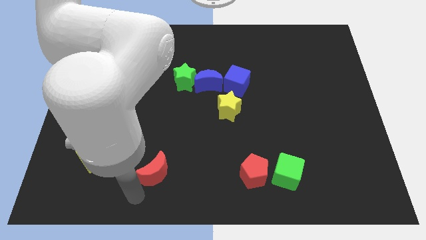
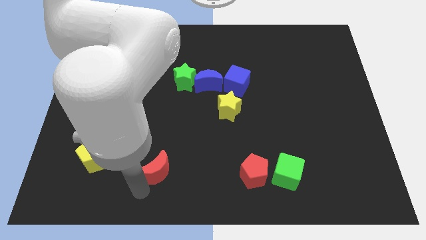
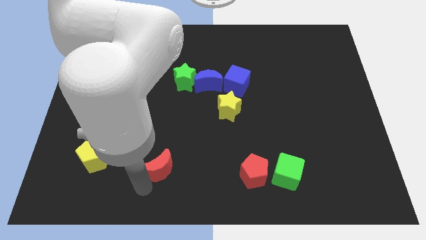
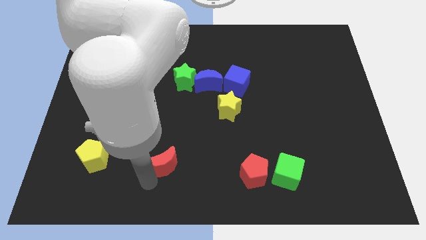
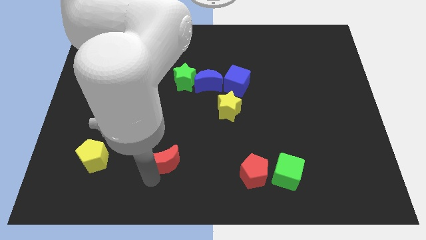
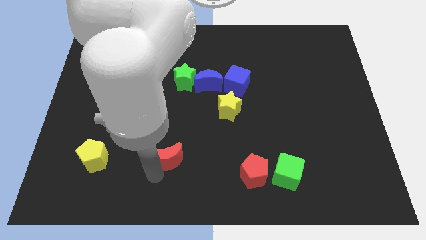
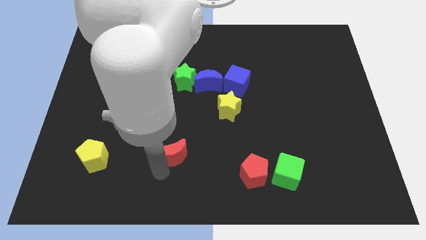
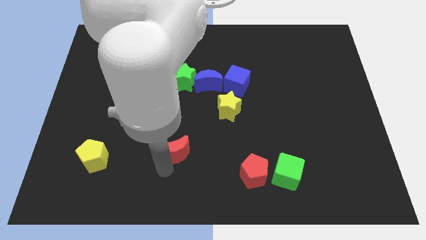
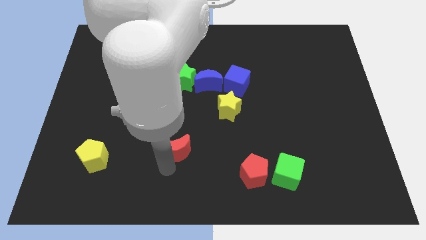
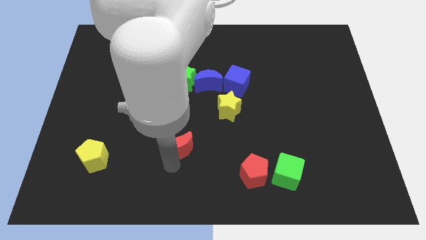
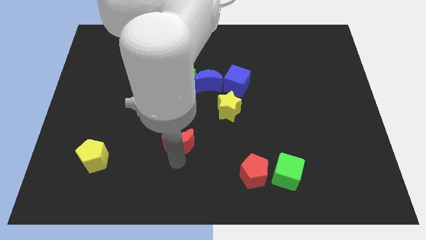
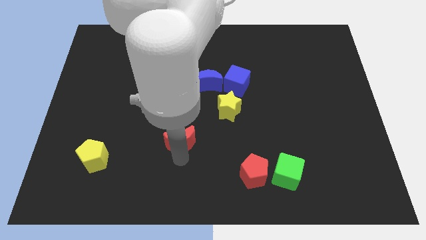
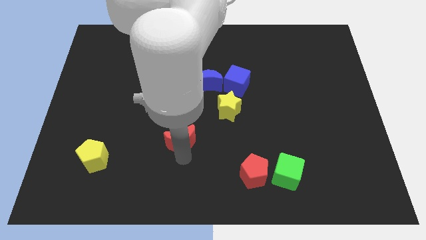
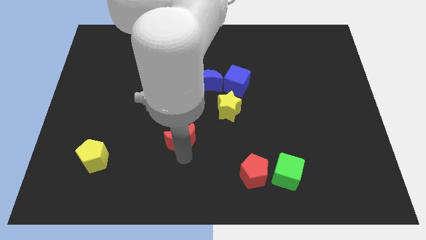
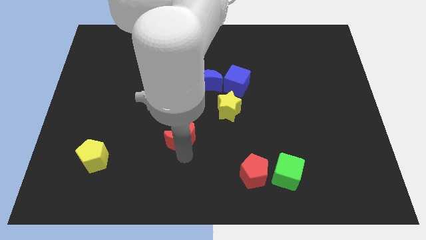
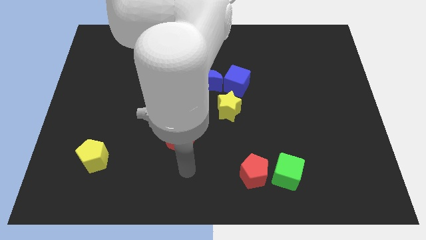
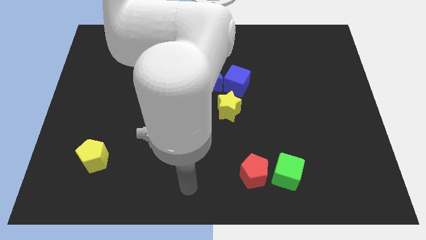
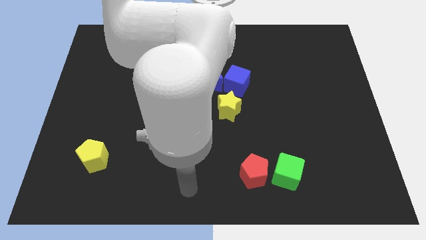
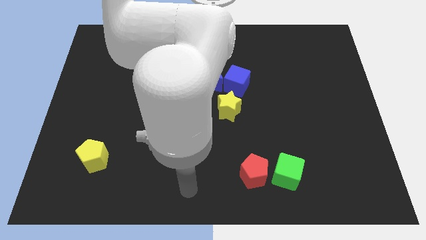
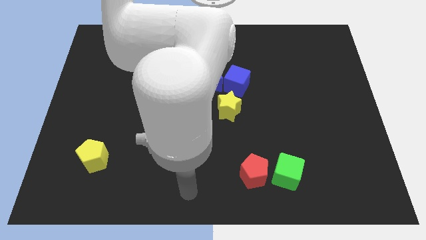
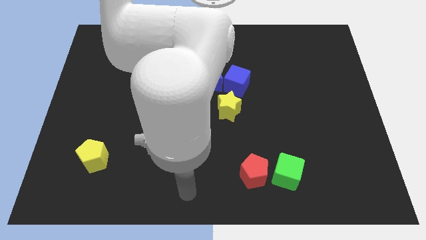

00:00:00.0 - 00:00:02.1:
push red moon towards center

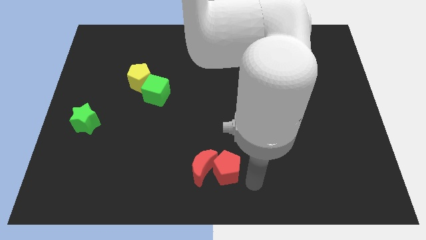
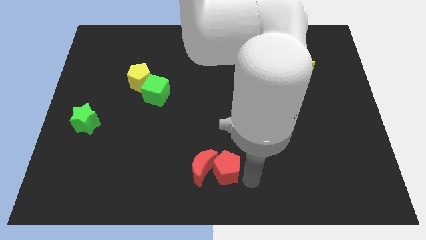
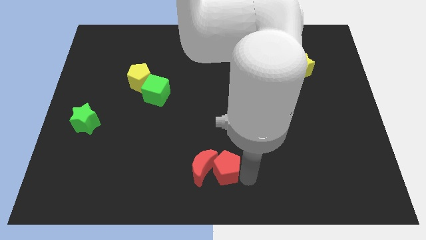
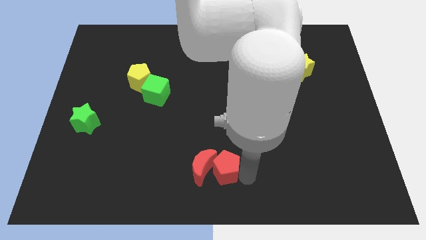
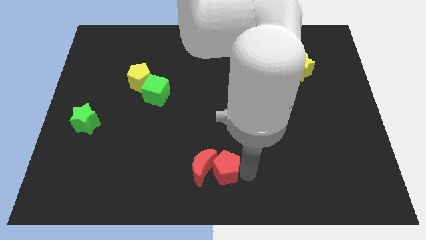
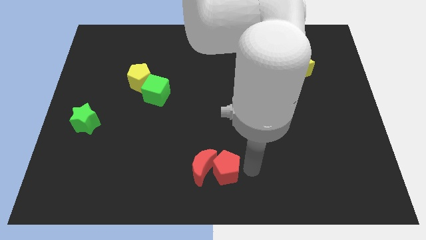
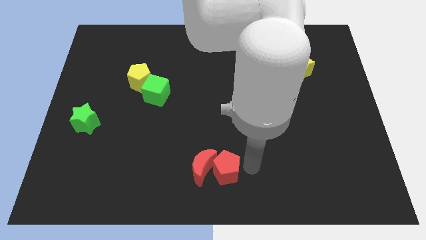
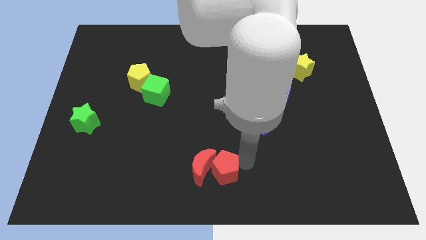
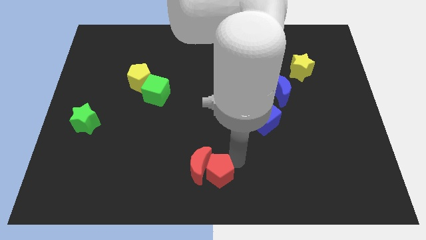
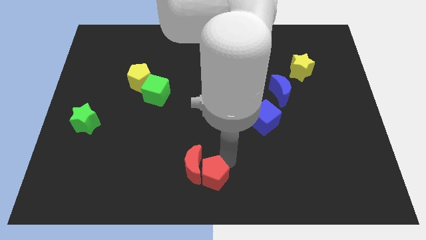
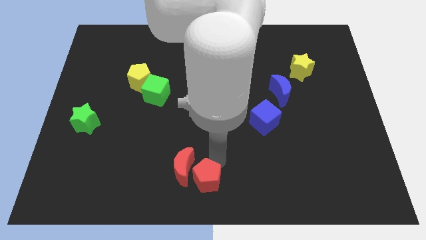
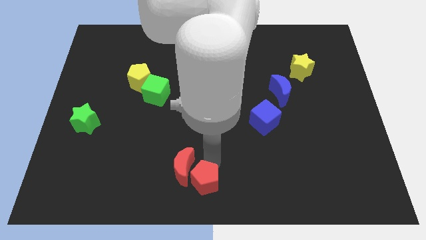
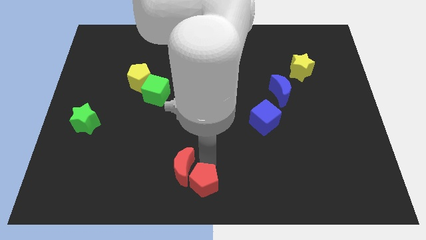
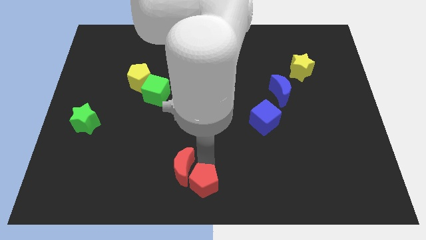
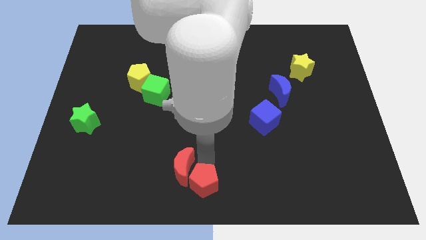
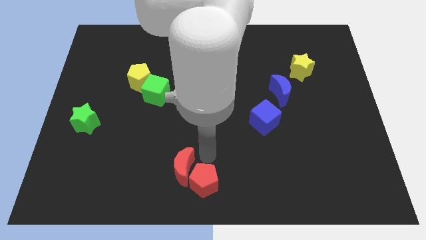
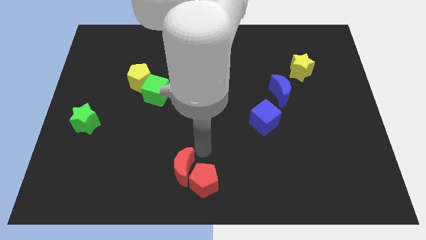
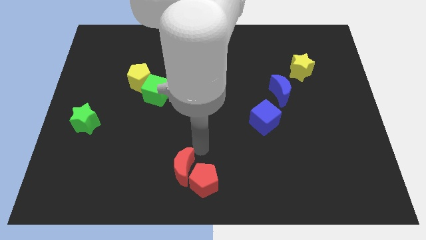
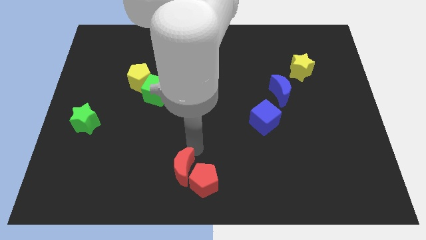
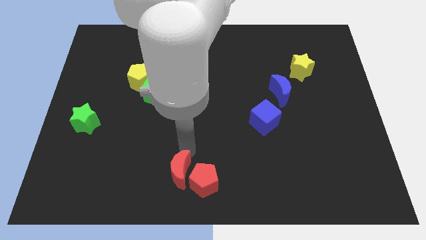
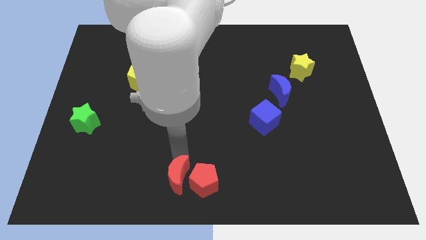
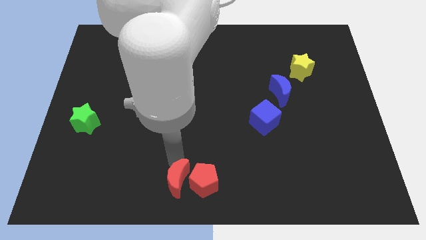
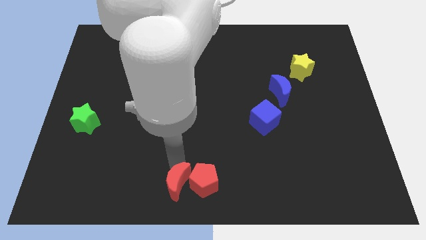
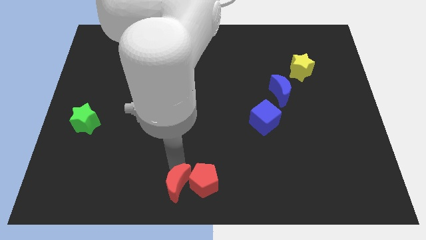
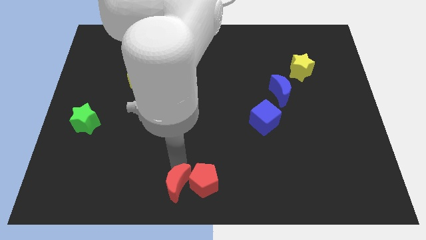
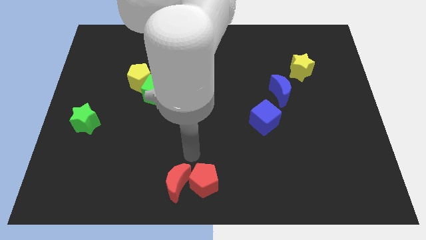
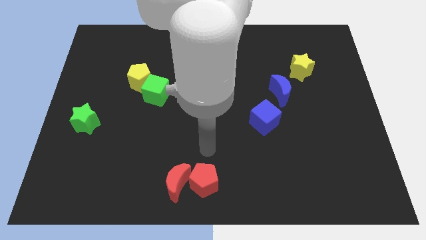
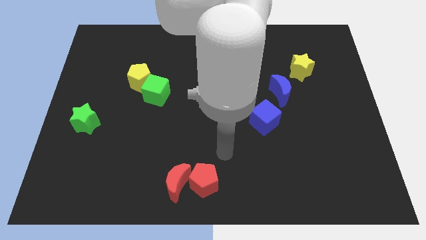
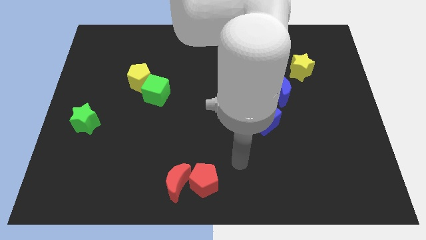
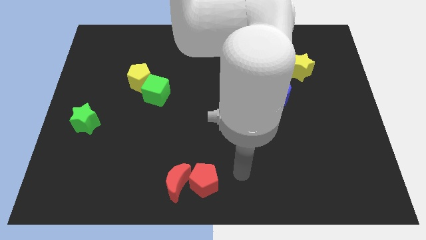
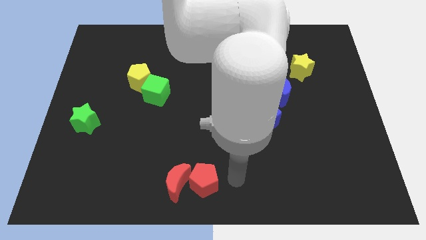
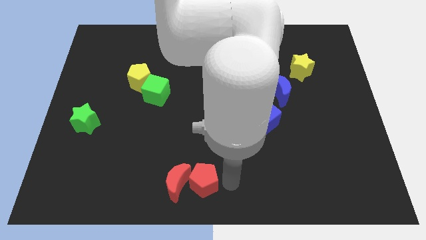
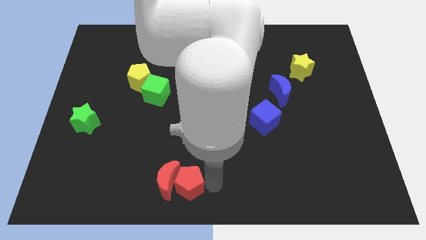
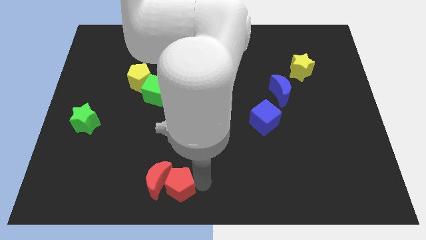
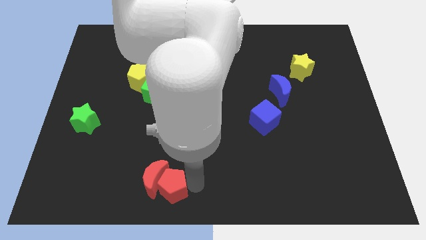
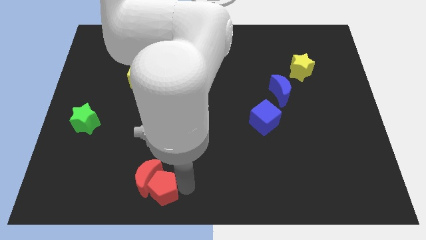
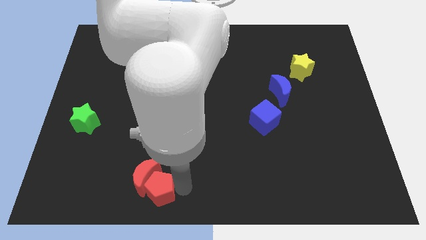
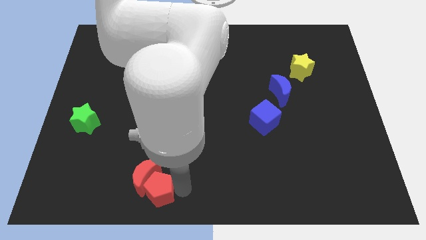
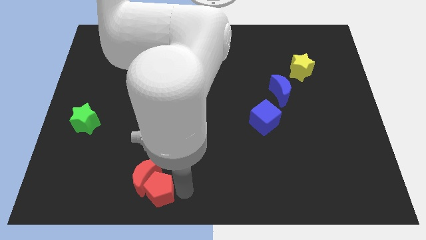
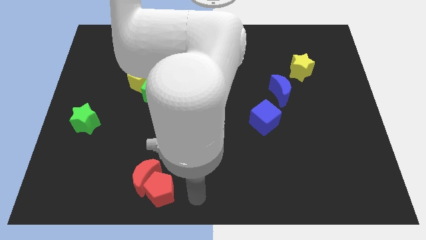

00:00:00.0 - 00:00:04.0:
push the red blocks towards the bottom left

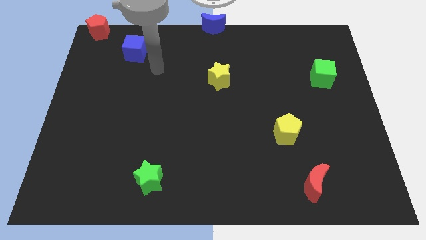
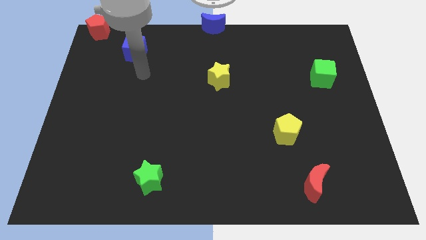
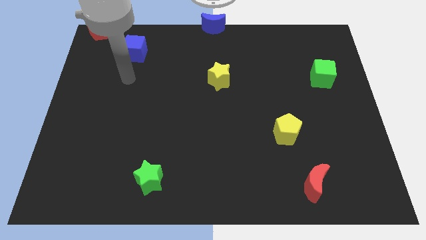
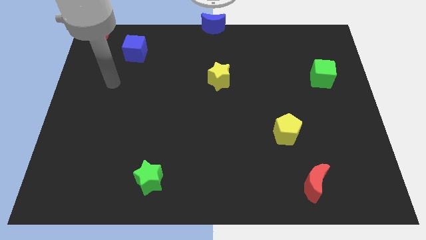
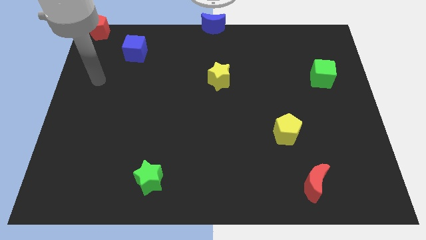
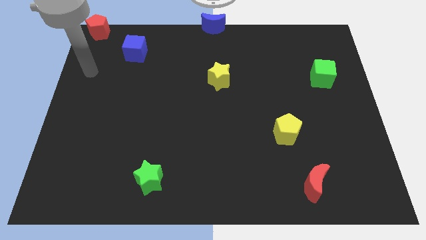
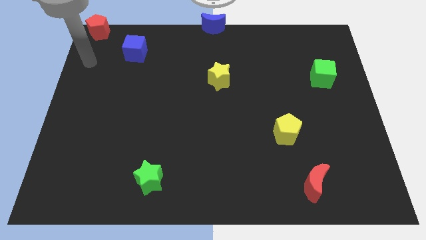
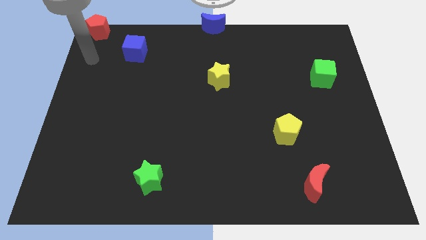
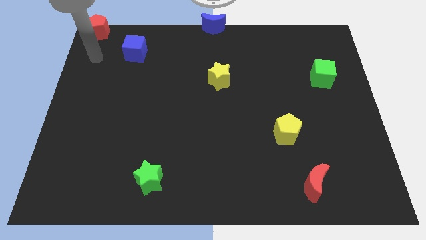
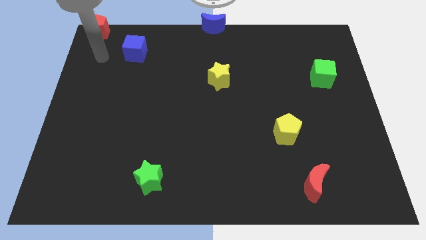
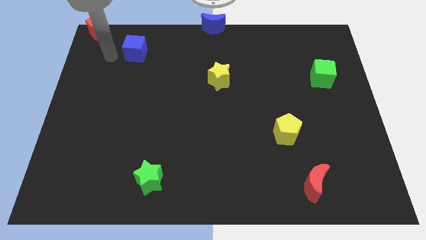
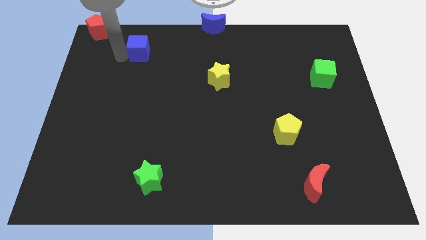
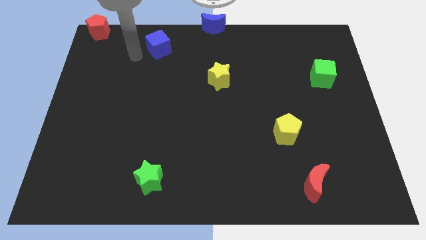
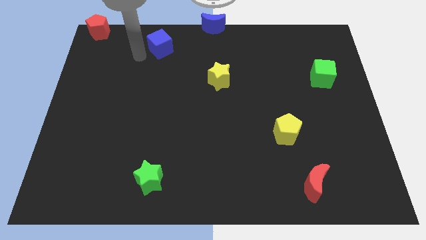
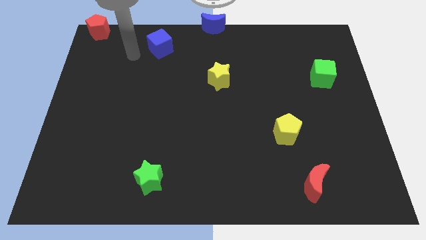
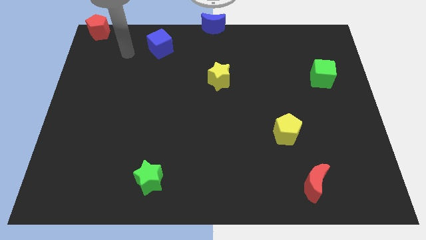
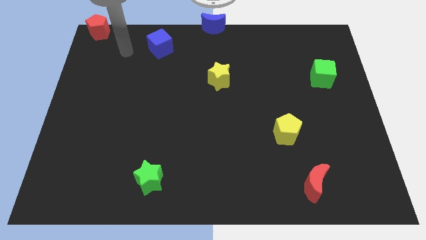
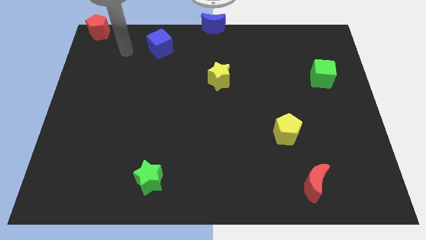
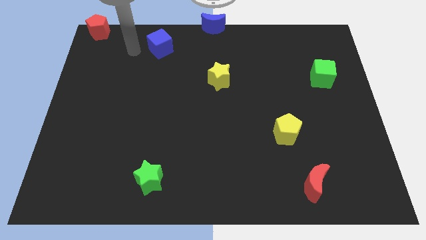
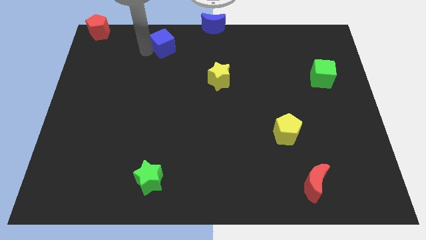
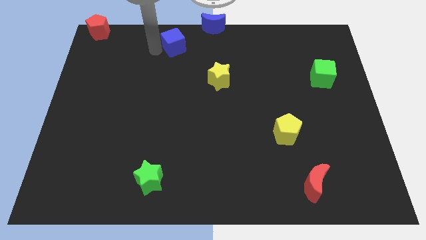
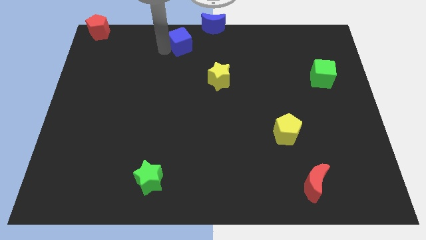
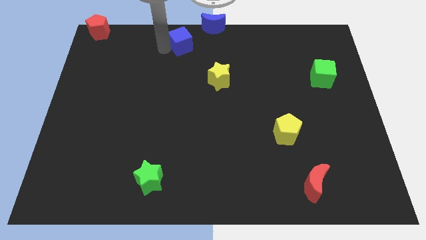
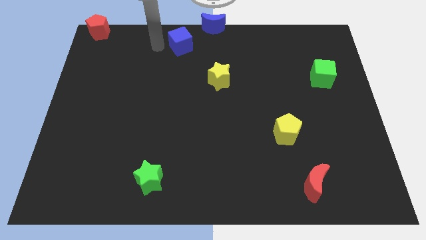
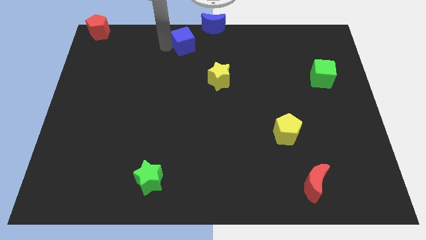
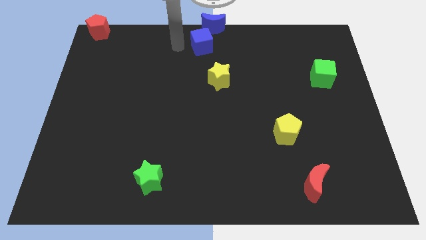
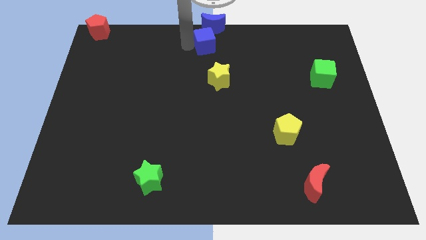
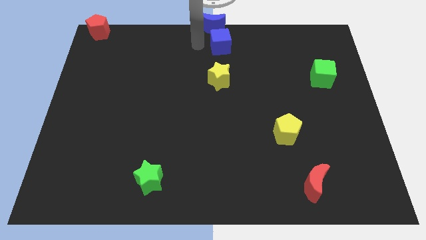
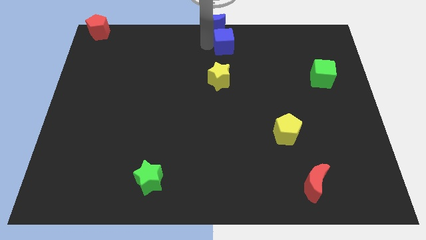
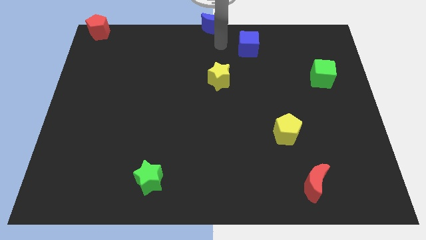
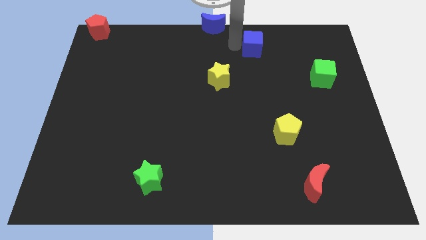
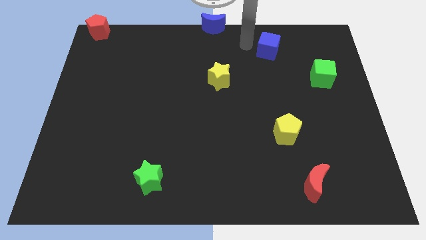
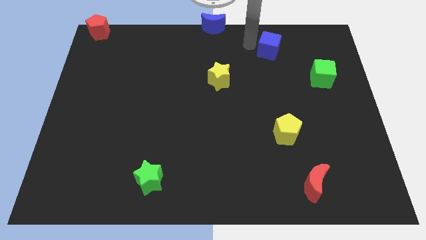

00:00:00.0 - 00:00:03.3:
push the blue cube towards the right side of the board
